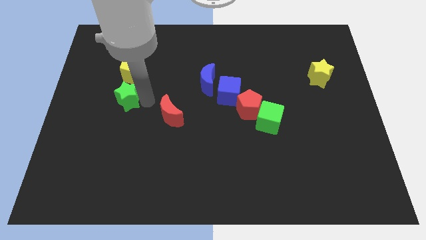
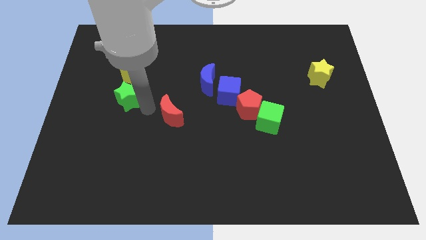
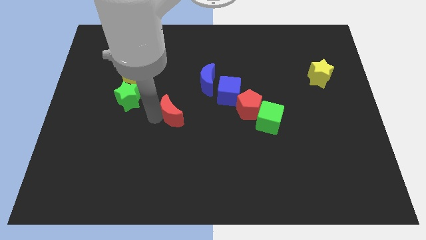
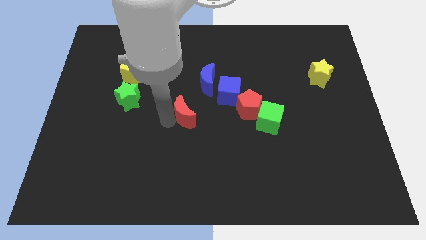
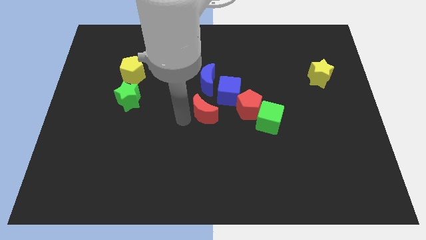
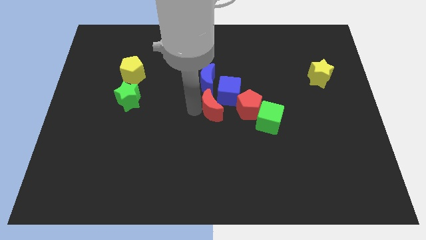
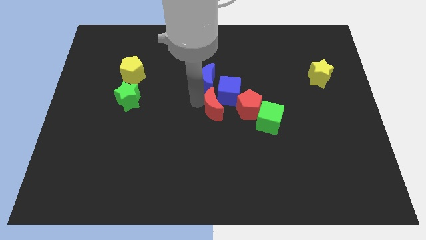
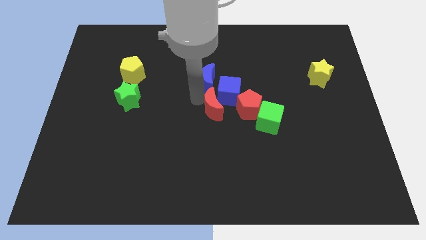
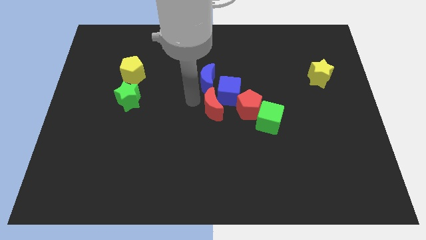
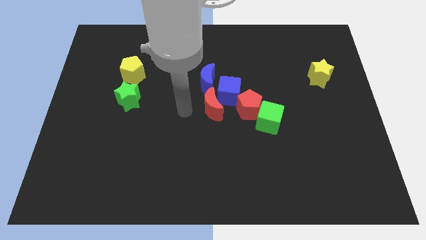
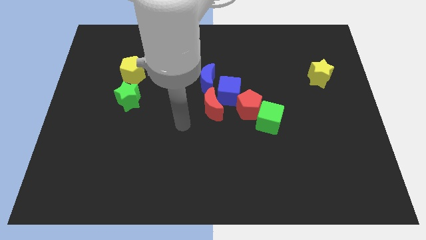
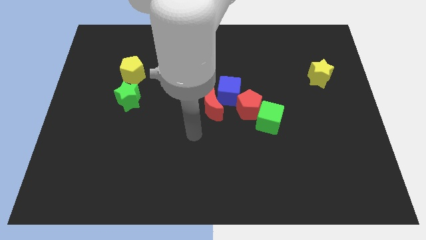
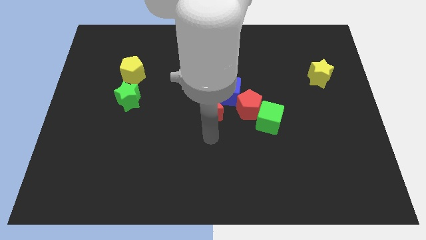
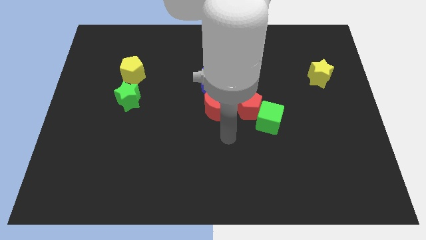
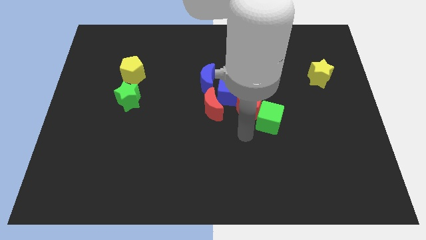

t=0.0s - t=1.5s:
push the red crescent below the blue crescent

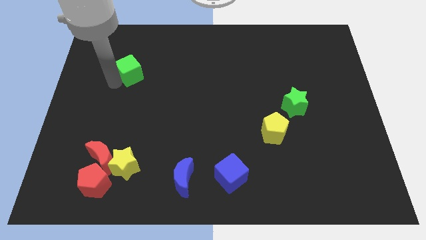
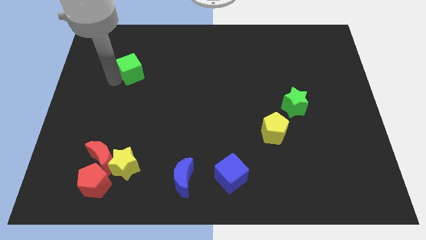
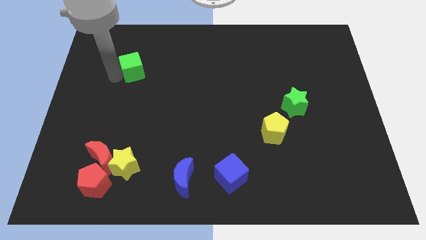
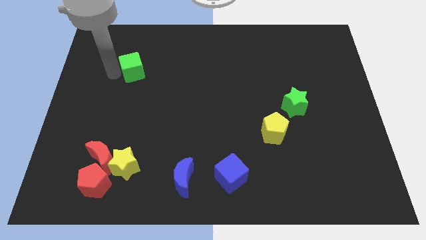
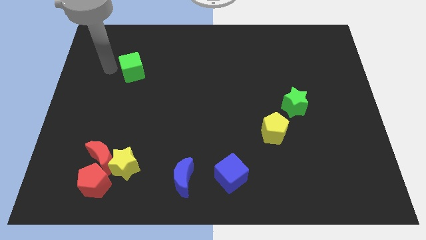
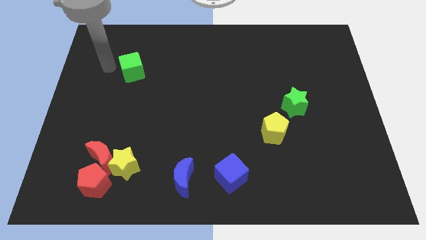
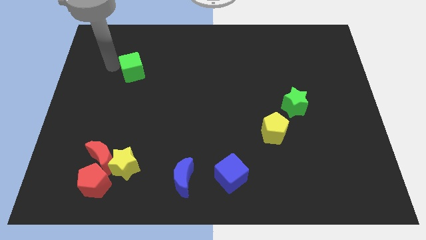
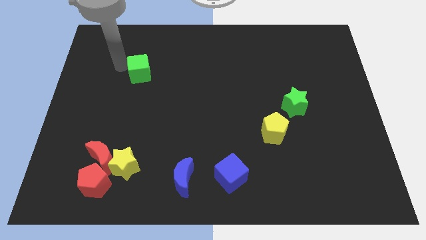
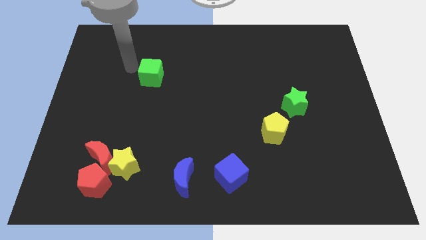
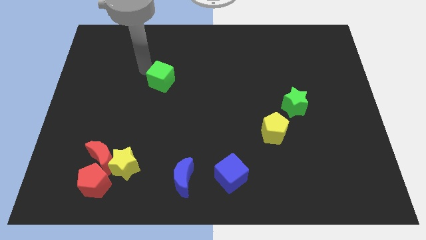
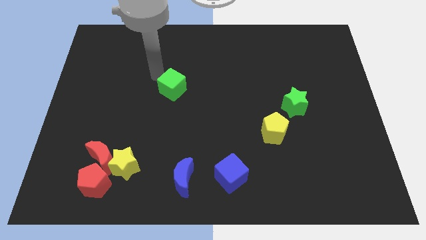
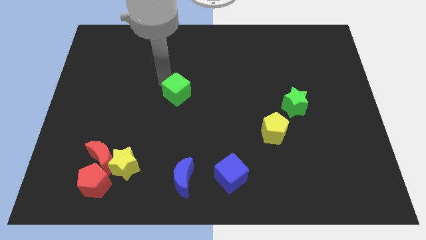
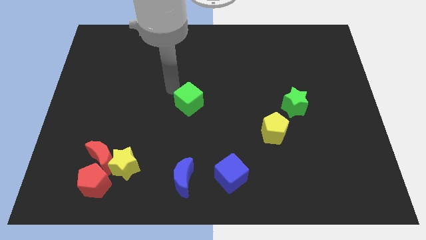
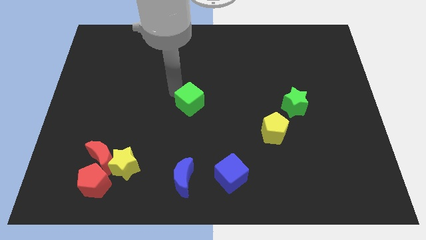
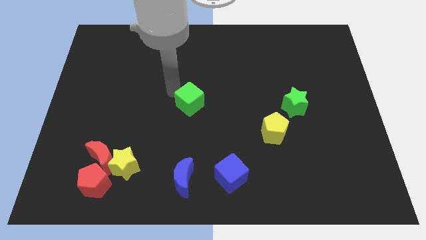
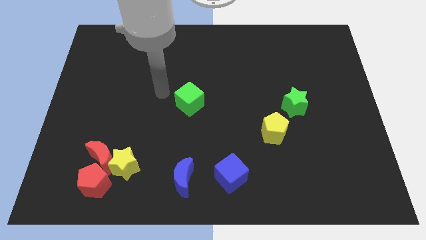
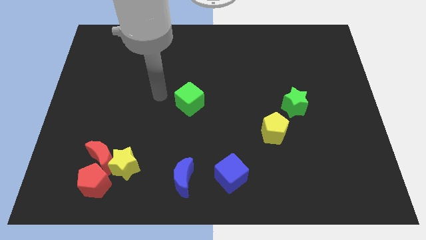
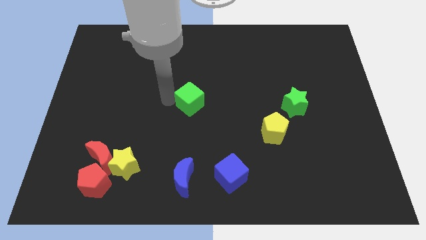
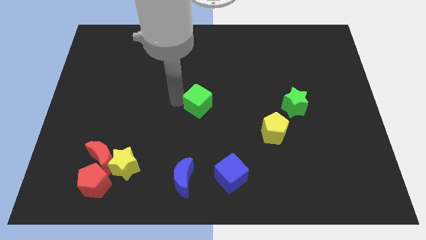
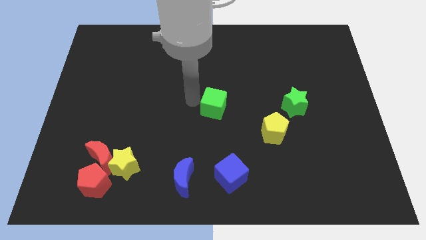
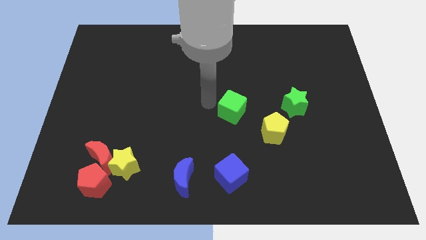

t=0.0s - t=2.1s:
move green cube parallel to the blue cube

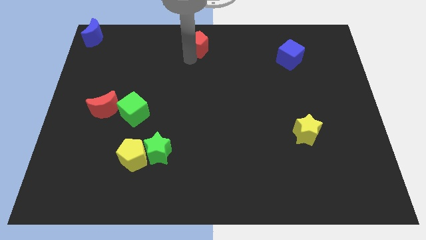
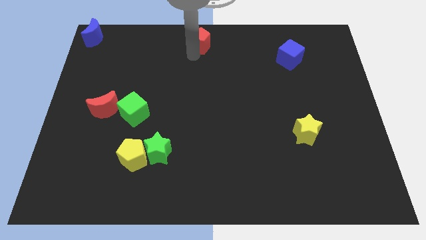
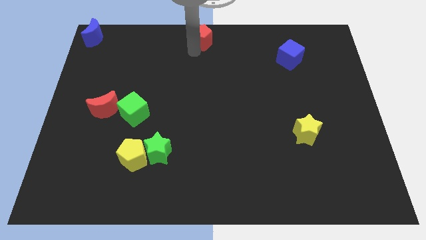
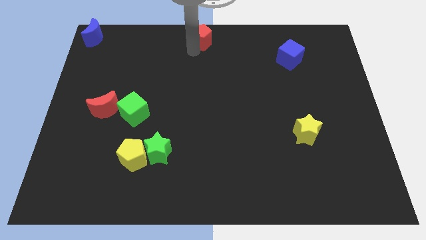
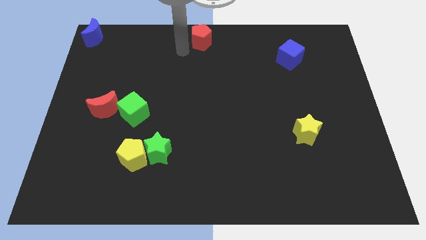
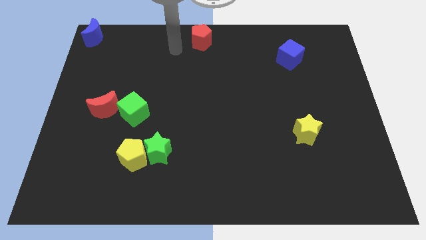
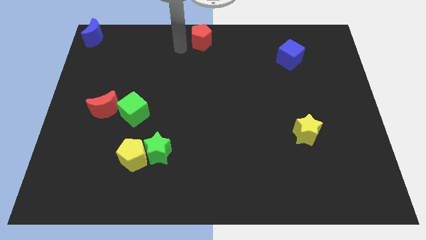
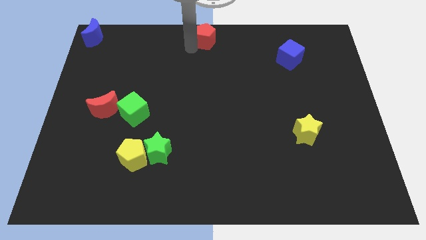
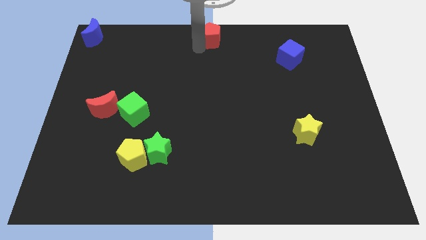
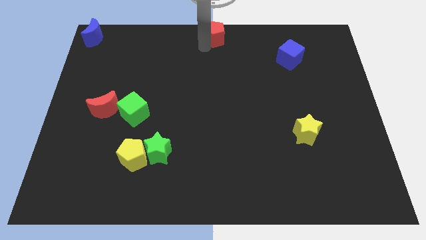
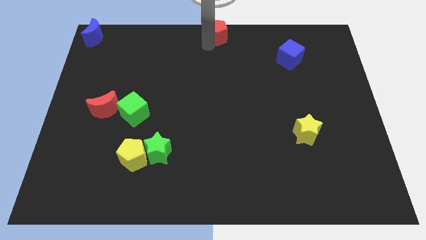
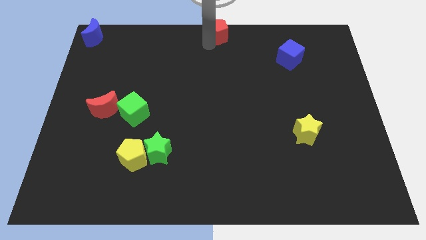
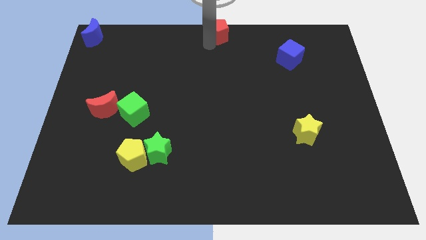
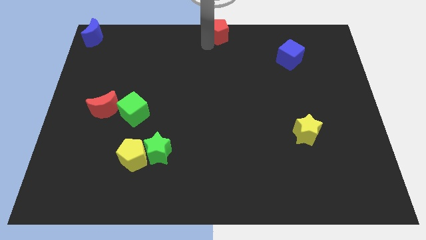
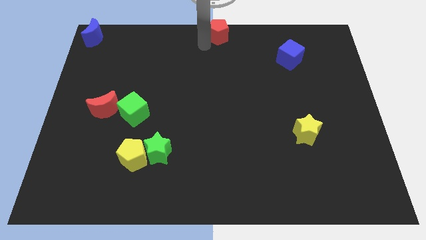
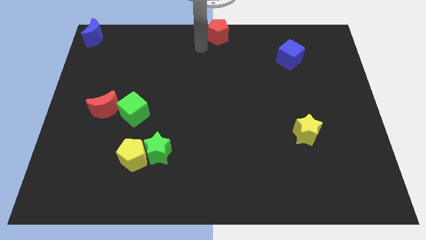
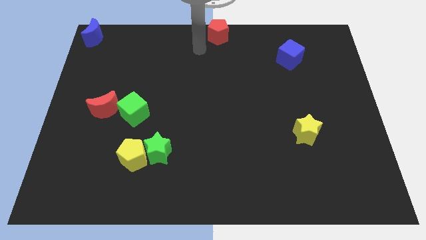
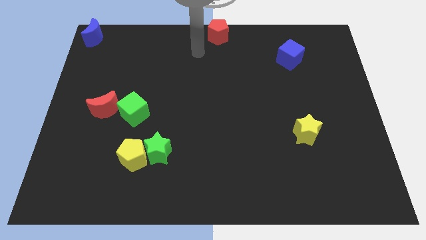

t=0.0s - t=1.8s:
put the red pentagon at the top center of the board

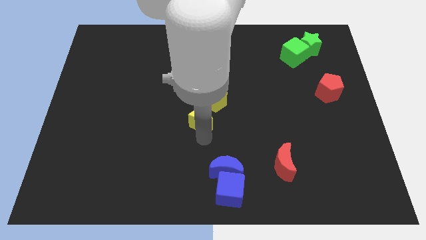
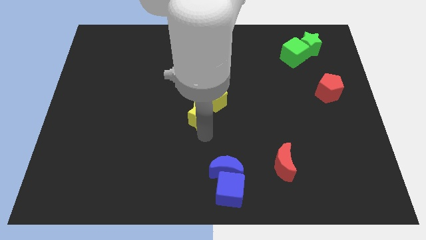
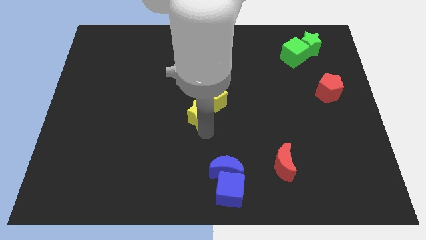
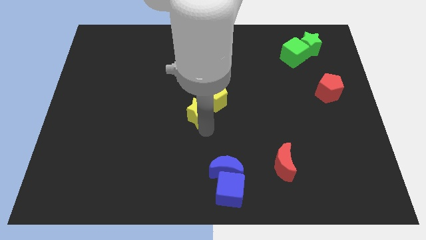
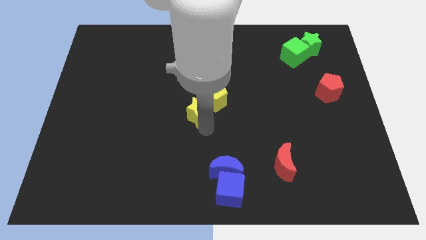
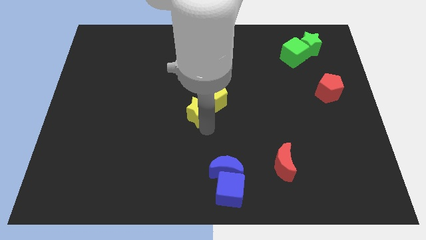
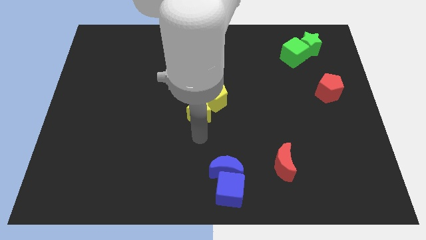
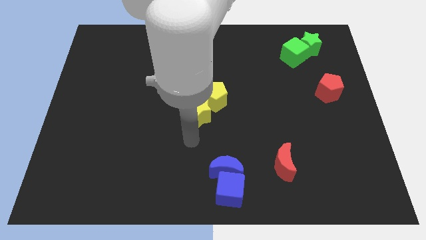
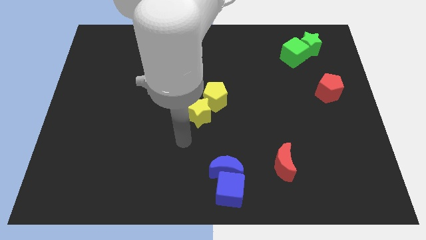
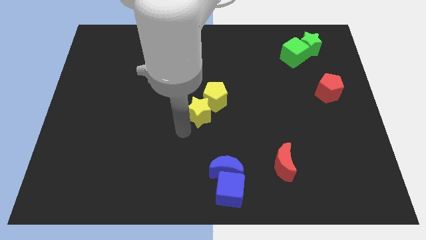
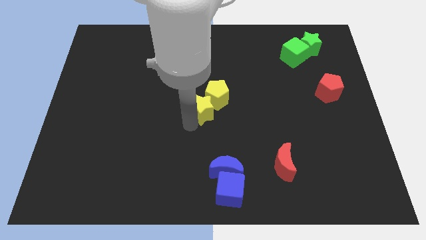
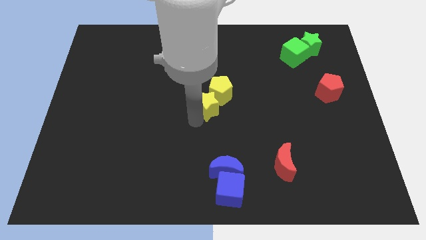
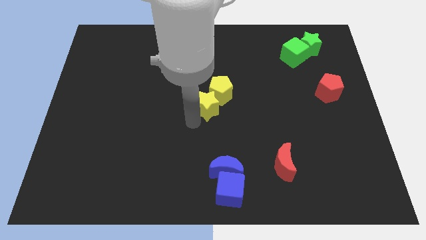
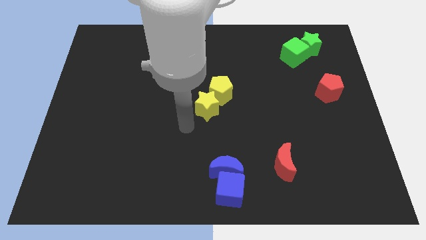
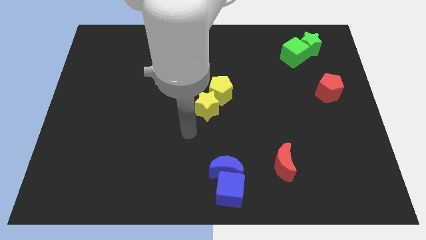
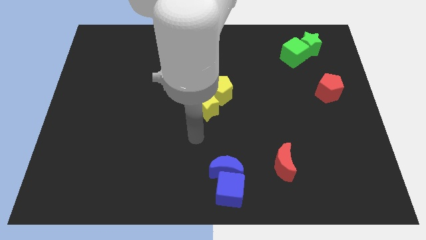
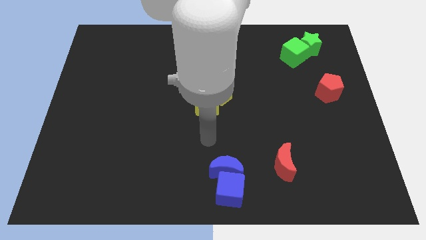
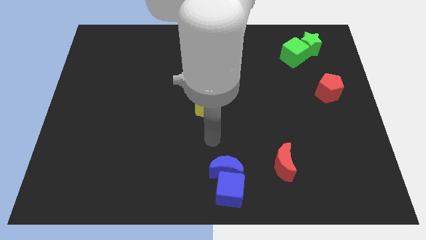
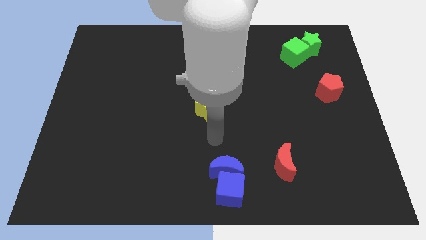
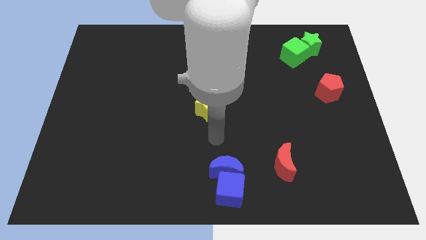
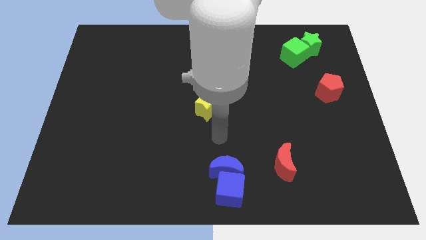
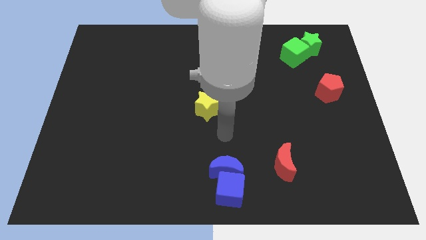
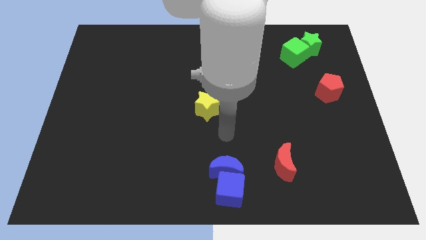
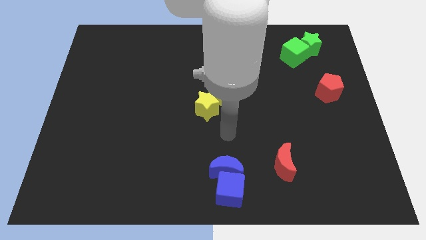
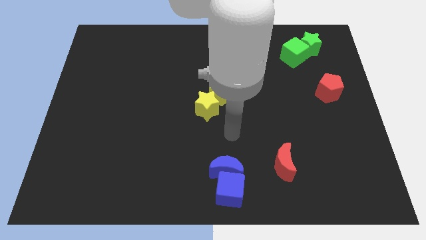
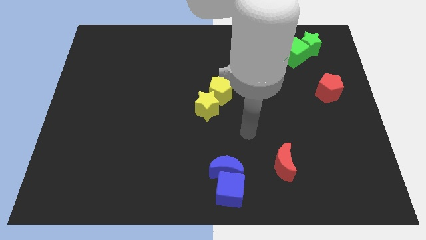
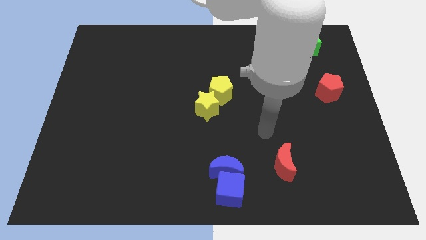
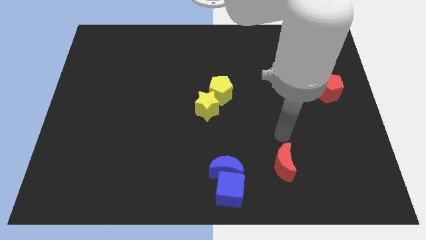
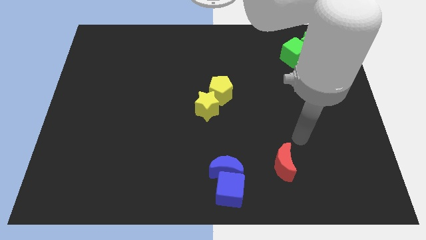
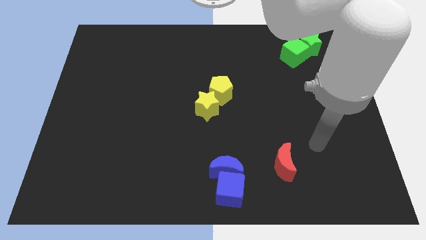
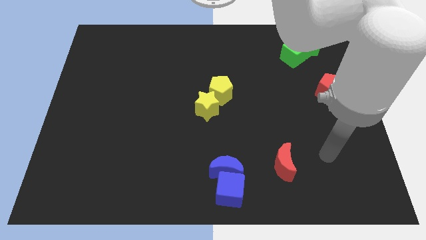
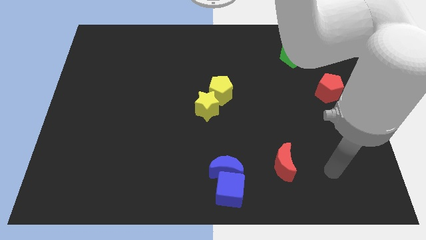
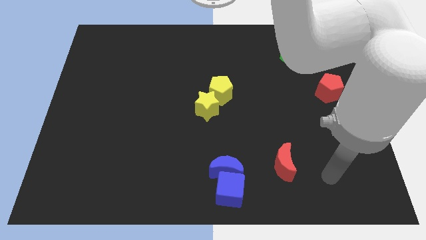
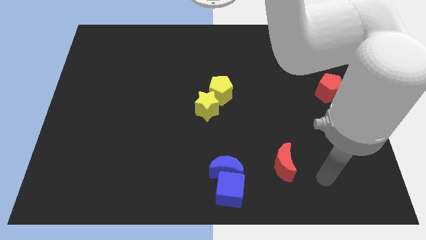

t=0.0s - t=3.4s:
push the yellow star and yellow pentagon to the top of the board
